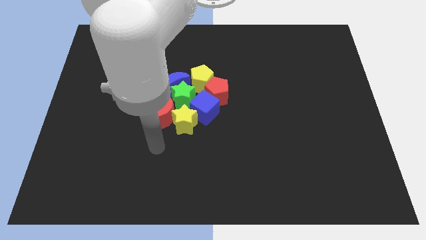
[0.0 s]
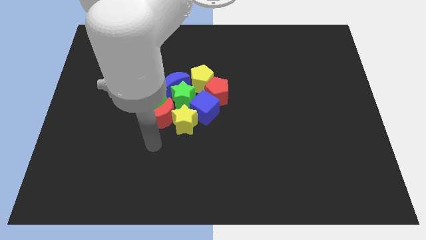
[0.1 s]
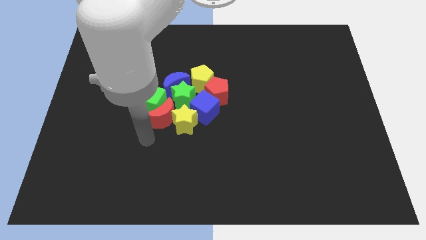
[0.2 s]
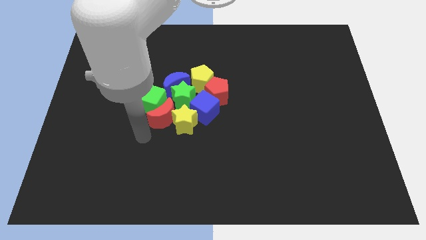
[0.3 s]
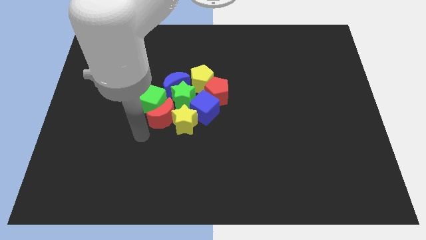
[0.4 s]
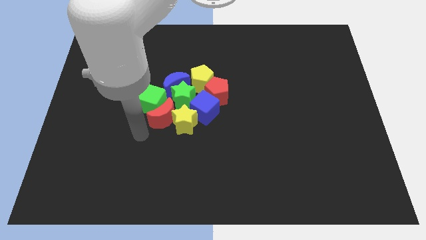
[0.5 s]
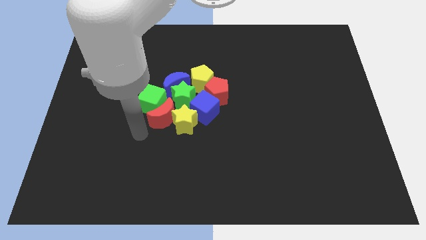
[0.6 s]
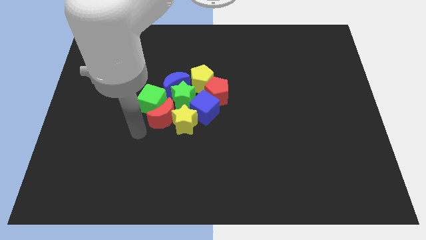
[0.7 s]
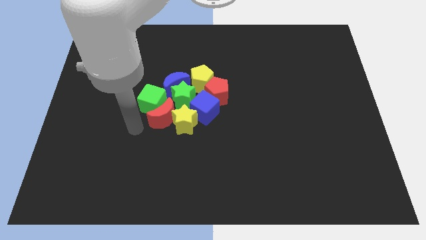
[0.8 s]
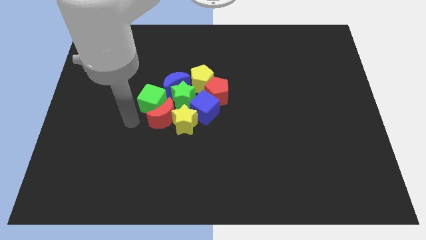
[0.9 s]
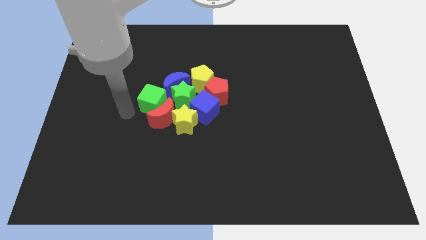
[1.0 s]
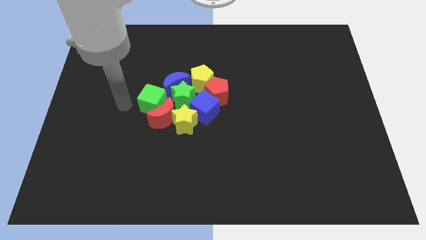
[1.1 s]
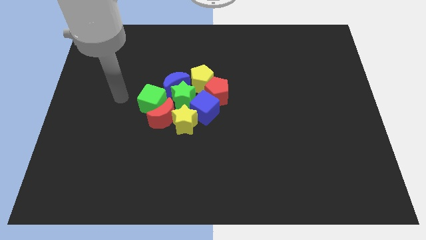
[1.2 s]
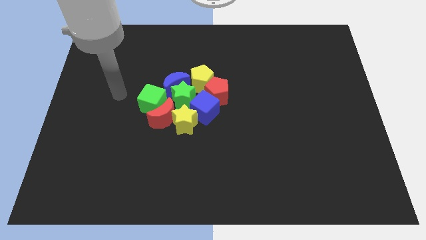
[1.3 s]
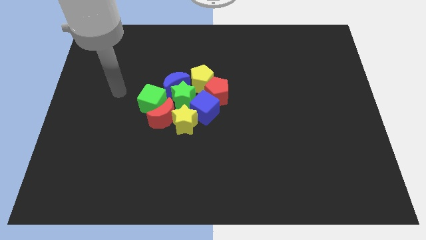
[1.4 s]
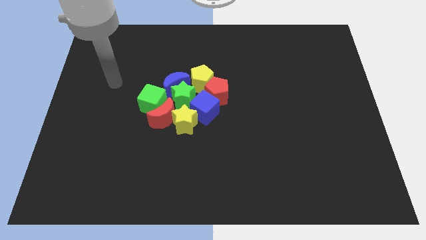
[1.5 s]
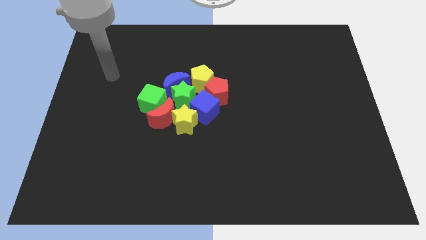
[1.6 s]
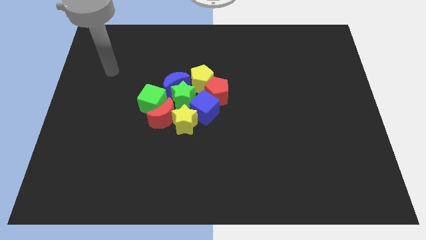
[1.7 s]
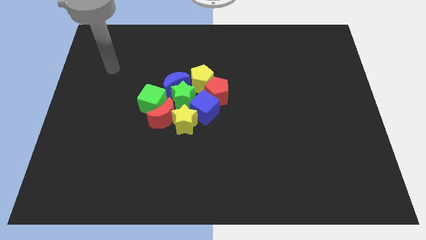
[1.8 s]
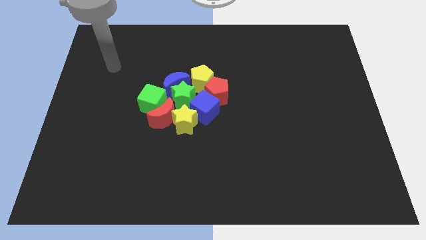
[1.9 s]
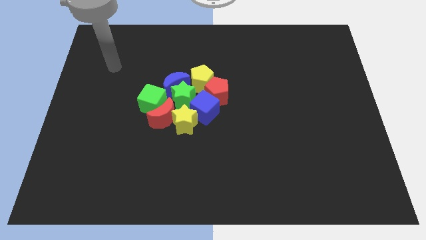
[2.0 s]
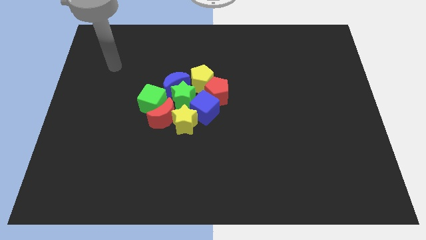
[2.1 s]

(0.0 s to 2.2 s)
move your arm towards the top left corner of the board

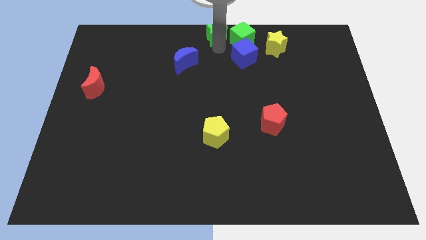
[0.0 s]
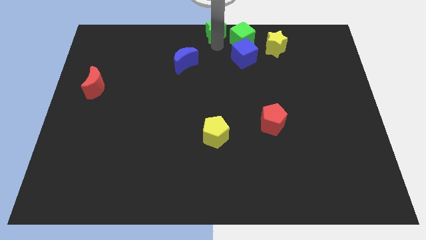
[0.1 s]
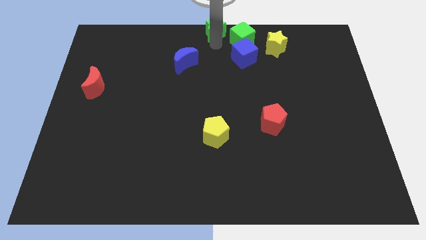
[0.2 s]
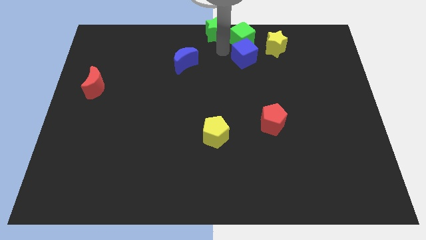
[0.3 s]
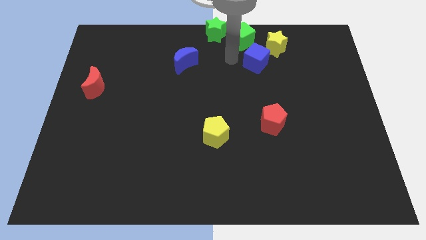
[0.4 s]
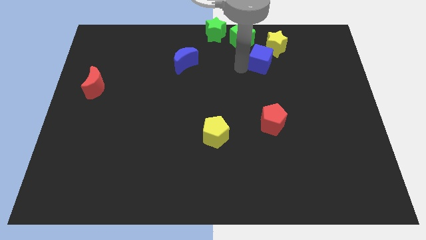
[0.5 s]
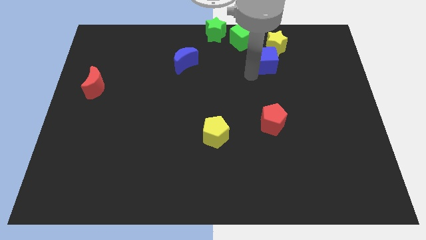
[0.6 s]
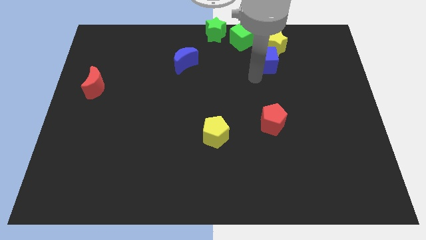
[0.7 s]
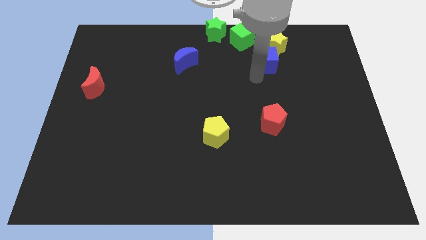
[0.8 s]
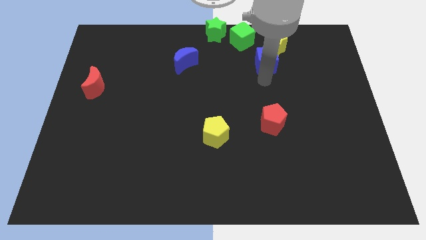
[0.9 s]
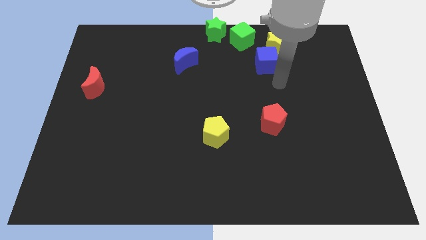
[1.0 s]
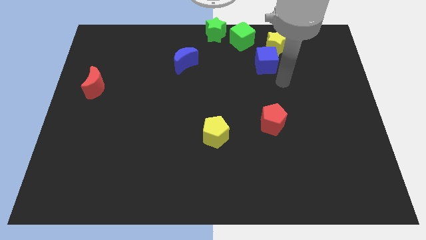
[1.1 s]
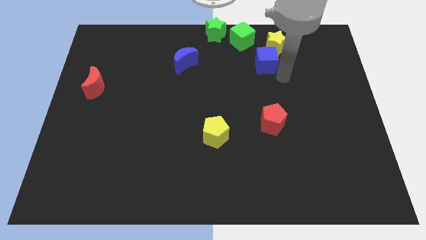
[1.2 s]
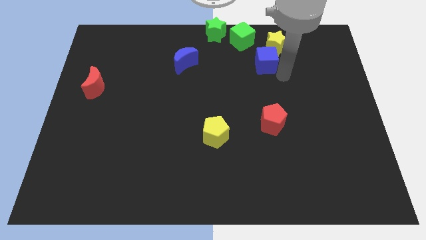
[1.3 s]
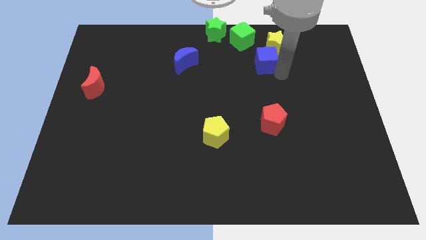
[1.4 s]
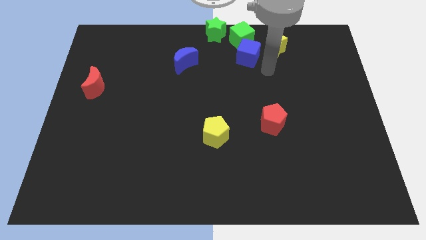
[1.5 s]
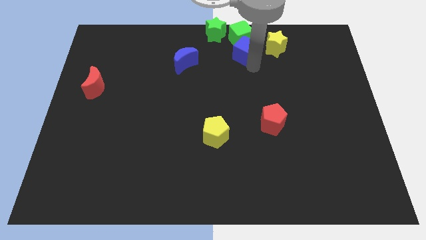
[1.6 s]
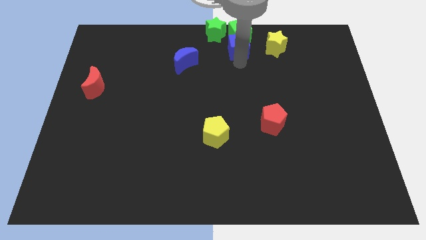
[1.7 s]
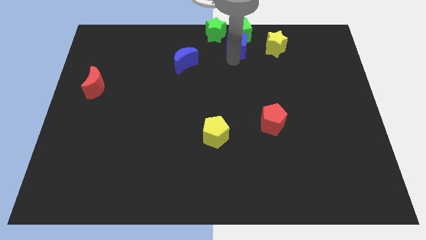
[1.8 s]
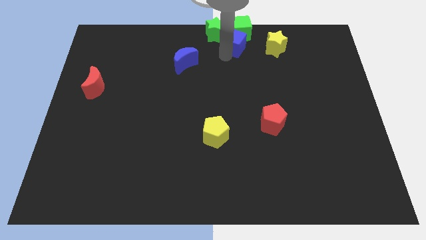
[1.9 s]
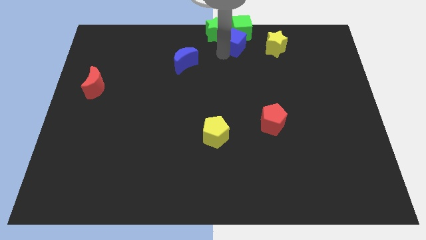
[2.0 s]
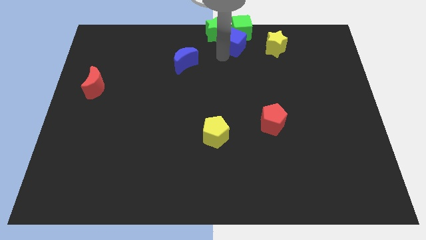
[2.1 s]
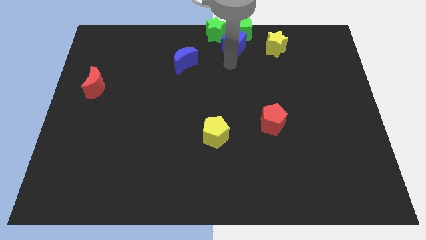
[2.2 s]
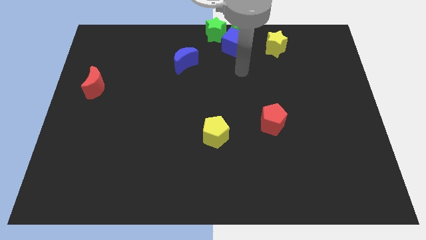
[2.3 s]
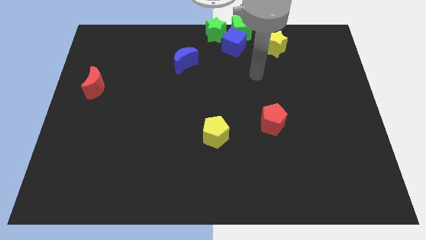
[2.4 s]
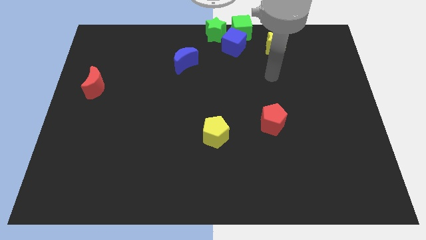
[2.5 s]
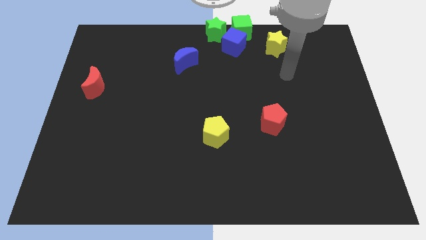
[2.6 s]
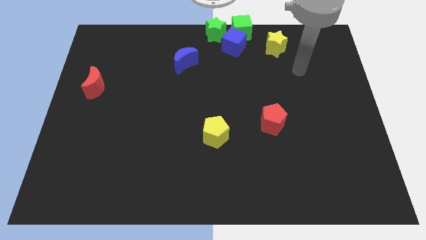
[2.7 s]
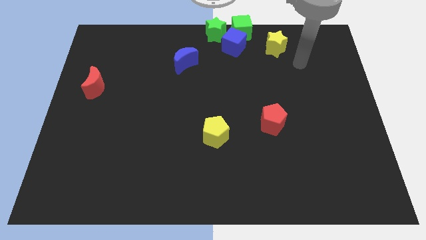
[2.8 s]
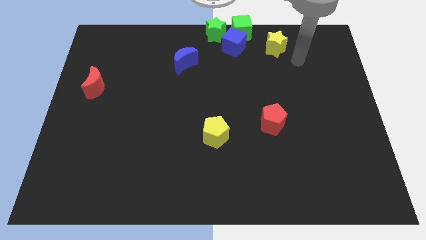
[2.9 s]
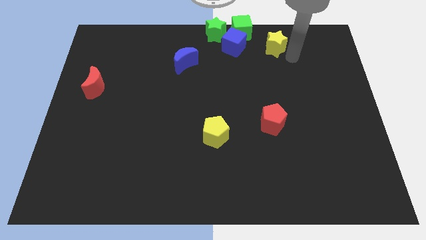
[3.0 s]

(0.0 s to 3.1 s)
push the blue cube into the green cube

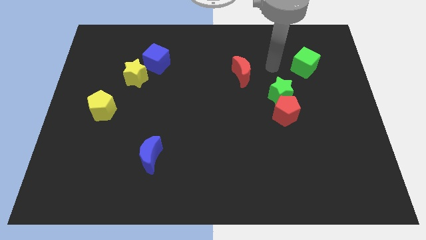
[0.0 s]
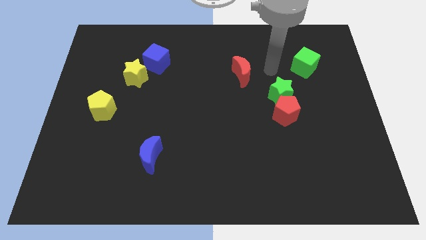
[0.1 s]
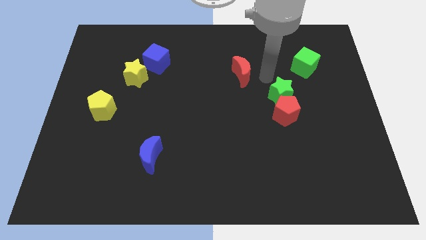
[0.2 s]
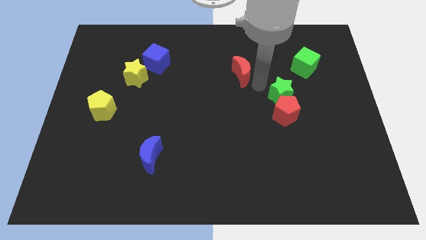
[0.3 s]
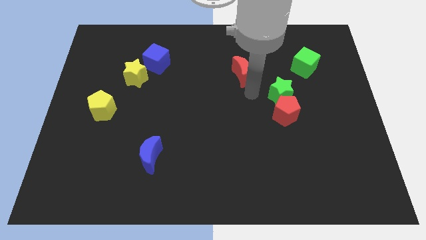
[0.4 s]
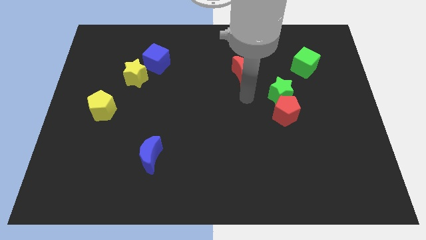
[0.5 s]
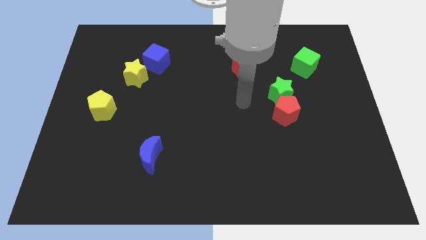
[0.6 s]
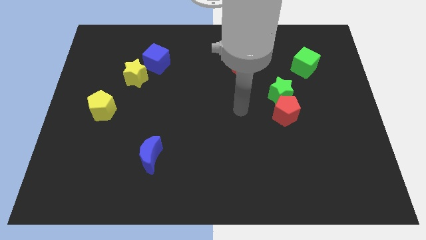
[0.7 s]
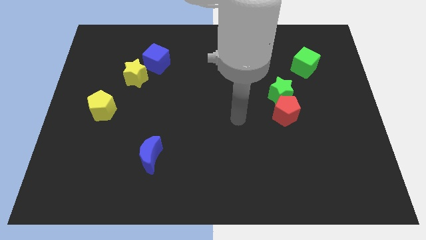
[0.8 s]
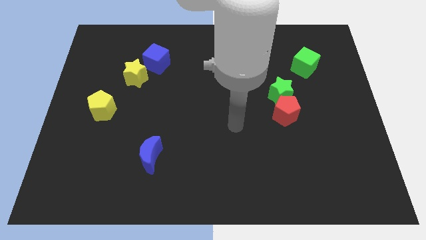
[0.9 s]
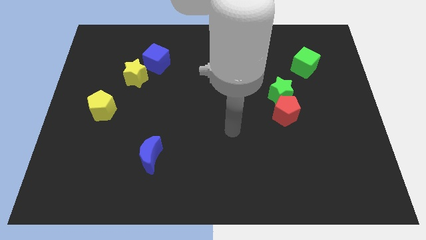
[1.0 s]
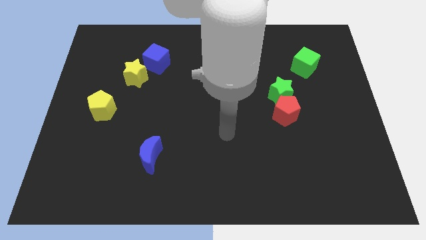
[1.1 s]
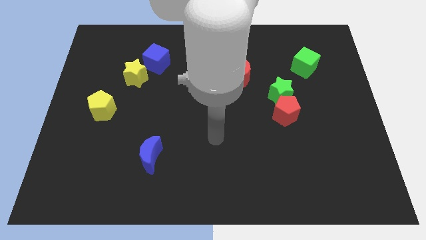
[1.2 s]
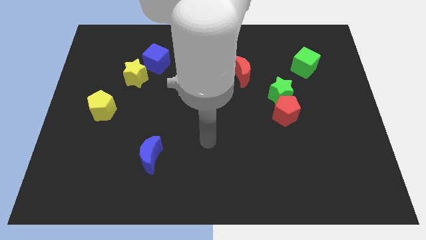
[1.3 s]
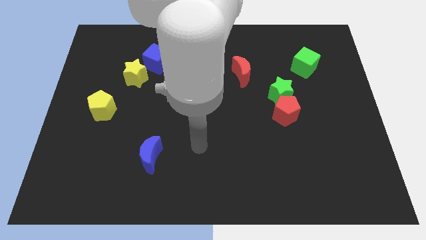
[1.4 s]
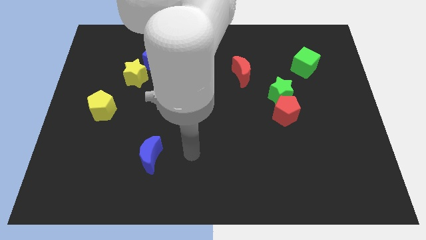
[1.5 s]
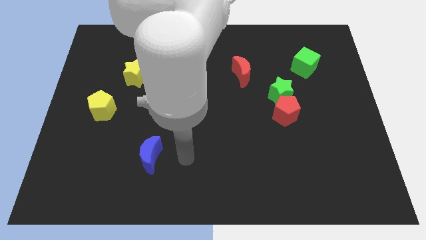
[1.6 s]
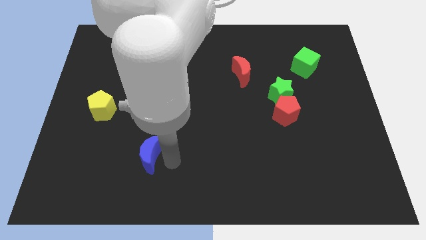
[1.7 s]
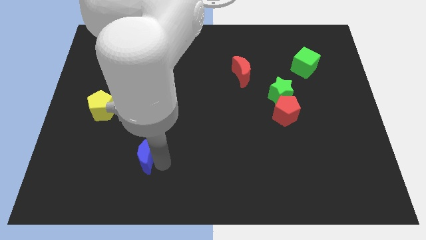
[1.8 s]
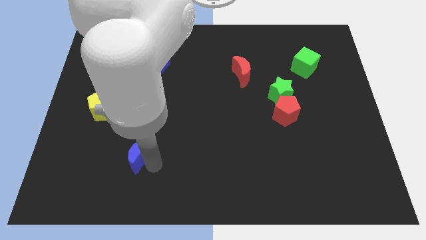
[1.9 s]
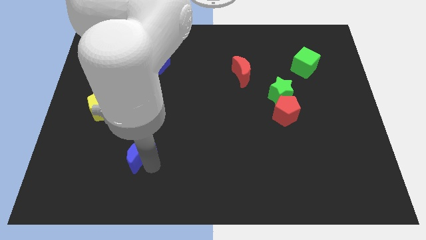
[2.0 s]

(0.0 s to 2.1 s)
slightly move the blue moon towards the left side

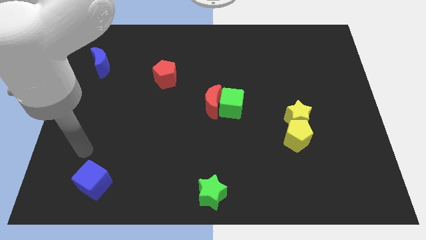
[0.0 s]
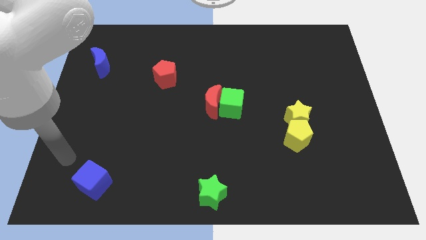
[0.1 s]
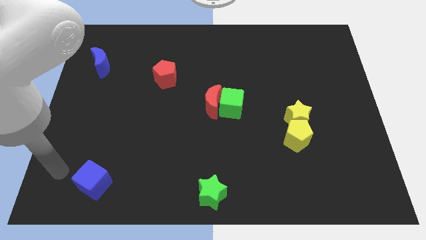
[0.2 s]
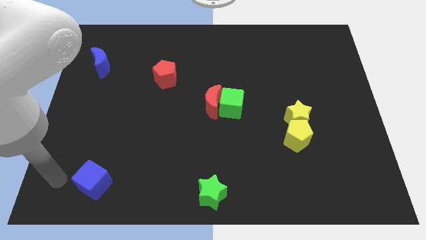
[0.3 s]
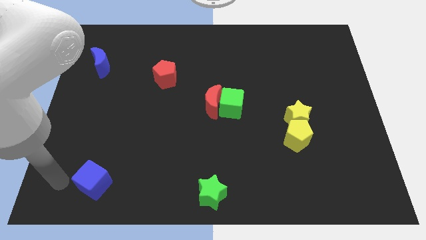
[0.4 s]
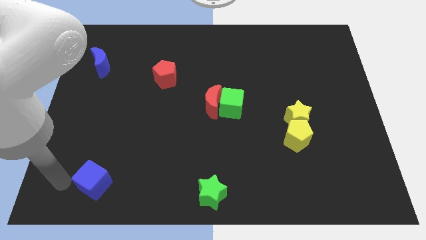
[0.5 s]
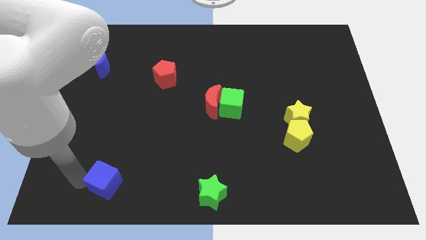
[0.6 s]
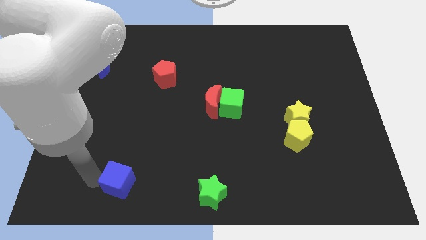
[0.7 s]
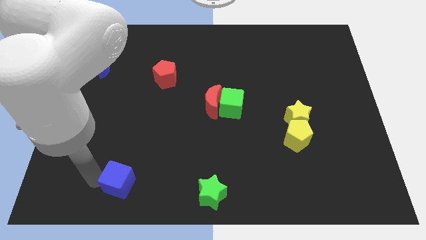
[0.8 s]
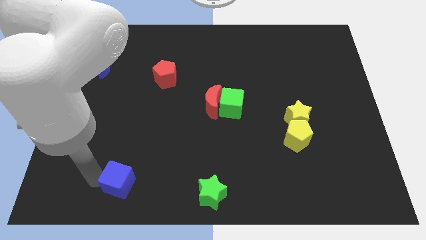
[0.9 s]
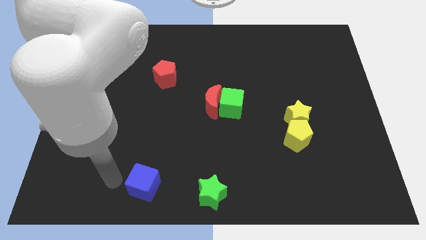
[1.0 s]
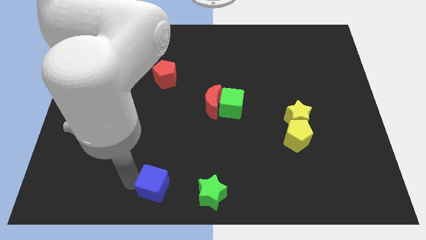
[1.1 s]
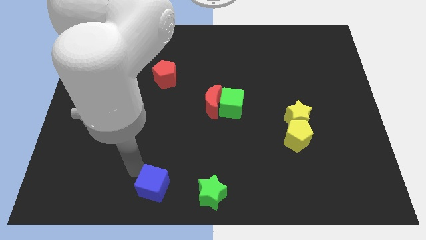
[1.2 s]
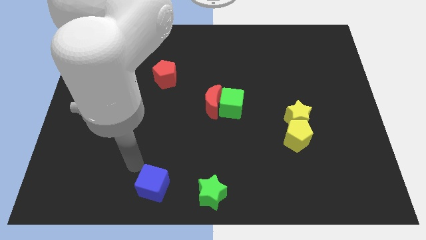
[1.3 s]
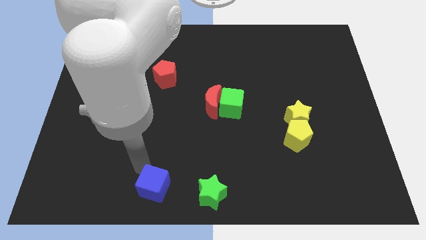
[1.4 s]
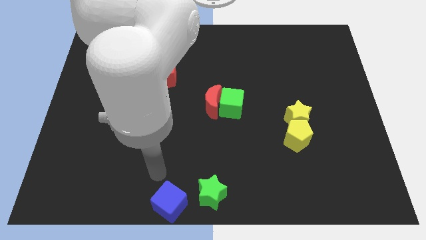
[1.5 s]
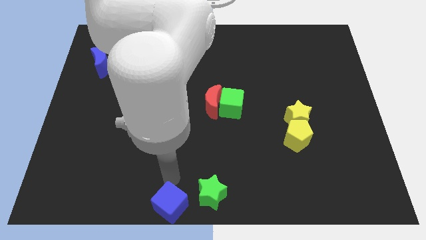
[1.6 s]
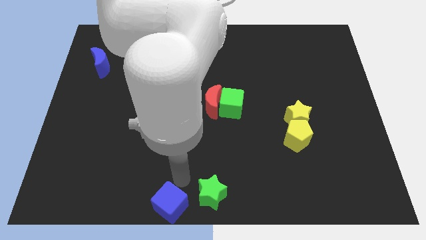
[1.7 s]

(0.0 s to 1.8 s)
move the blue cube to the bottom left of the green star
